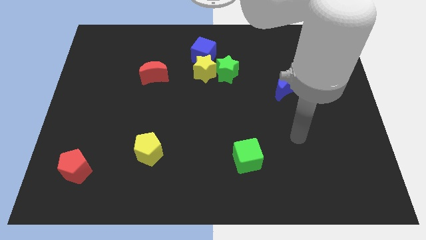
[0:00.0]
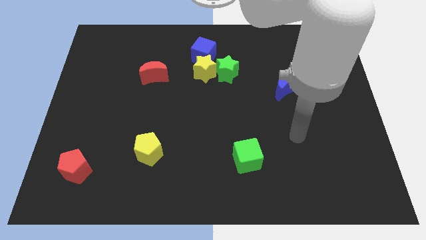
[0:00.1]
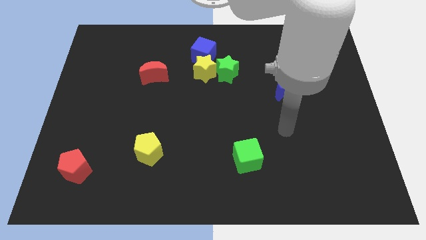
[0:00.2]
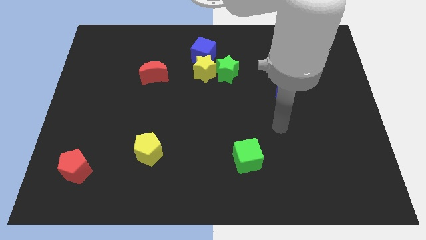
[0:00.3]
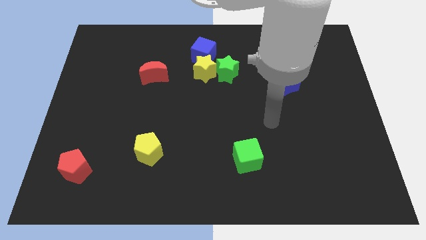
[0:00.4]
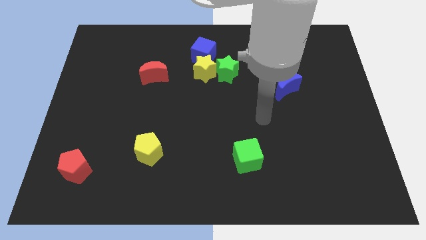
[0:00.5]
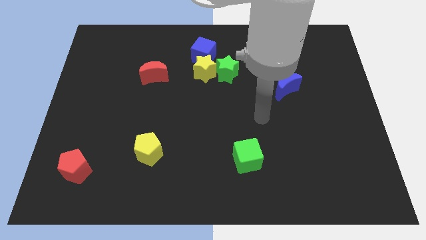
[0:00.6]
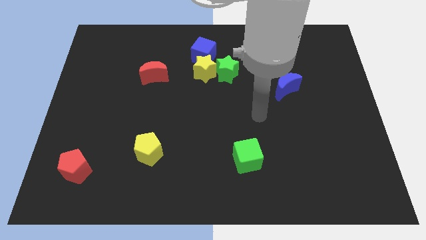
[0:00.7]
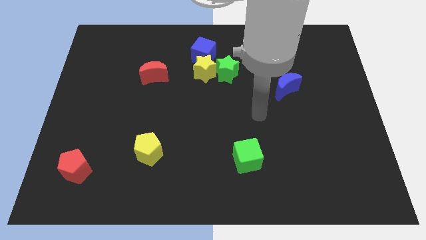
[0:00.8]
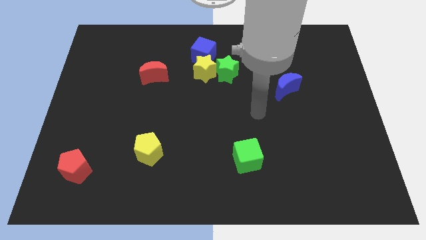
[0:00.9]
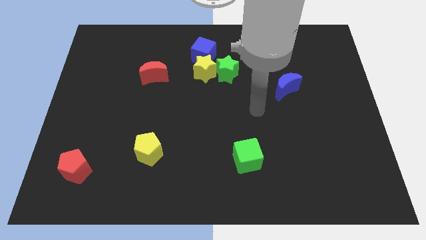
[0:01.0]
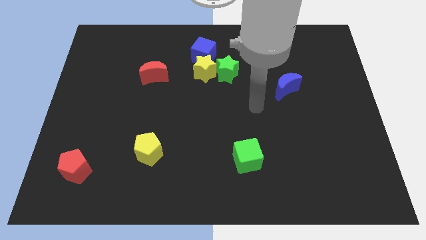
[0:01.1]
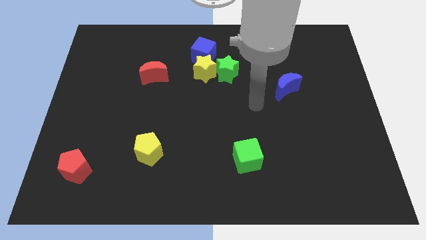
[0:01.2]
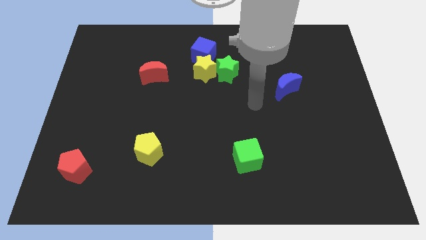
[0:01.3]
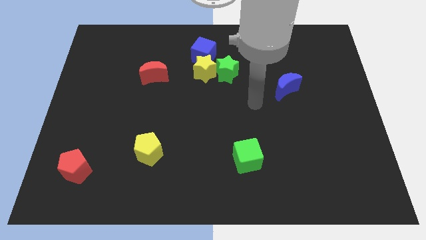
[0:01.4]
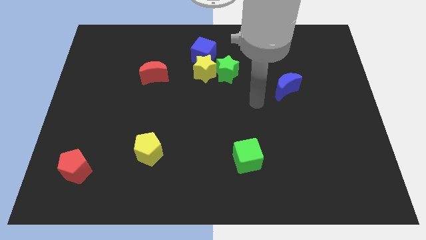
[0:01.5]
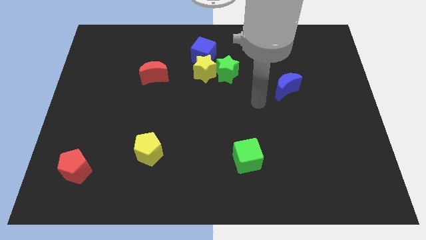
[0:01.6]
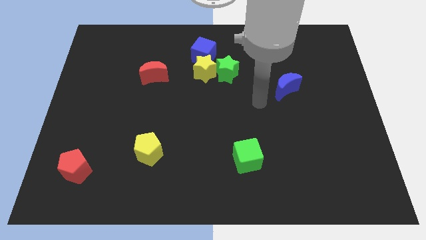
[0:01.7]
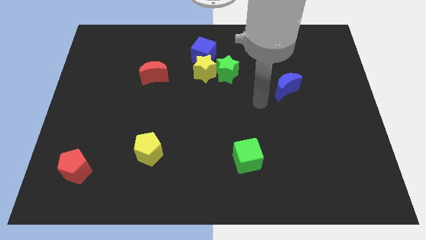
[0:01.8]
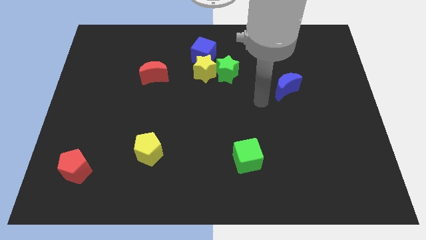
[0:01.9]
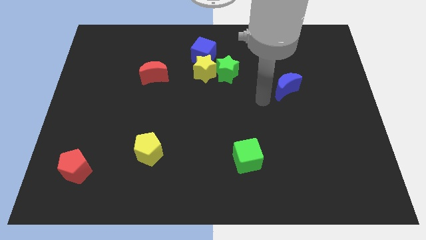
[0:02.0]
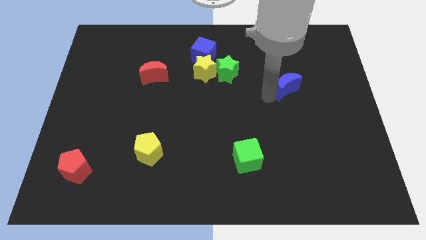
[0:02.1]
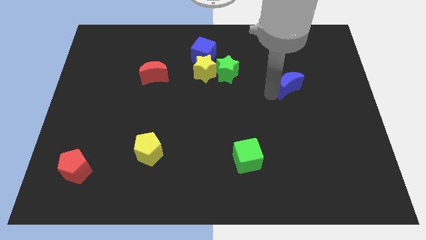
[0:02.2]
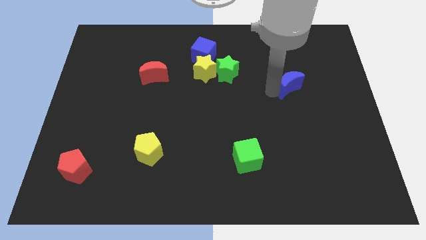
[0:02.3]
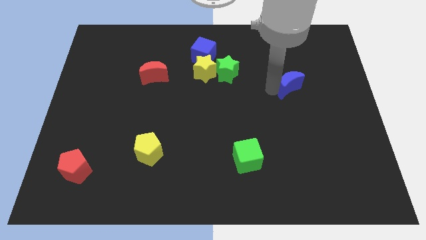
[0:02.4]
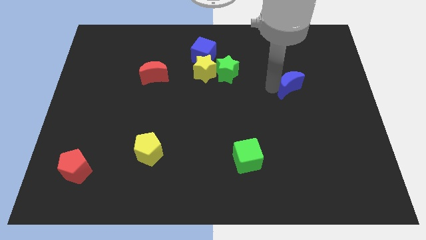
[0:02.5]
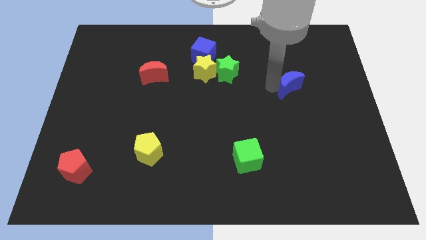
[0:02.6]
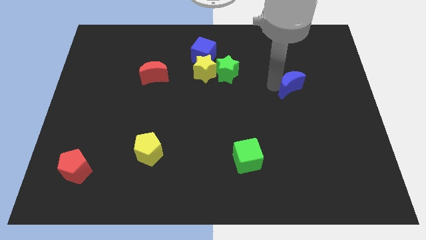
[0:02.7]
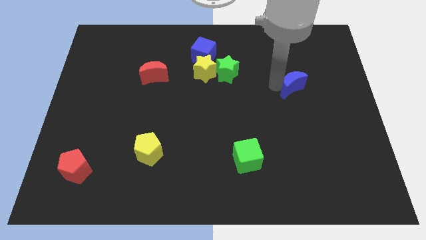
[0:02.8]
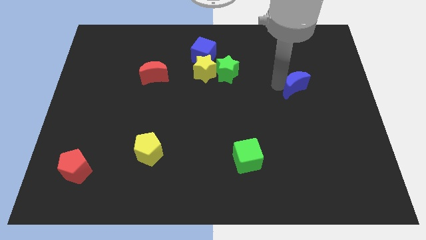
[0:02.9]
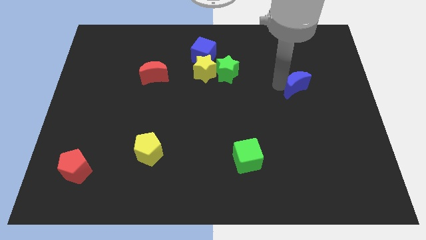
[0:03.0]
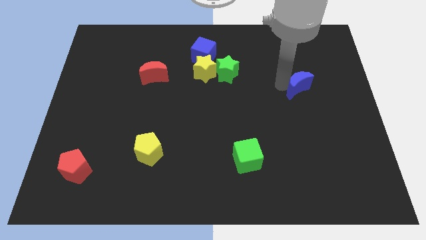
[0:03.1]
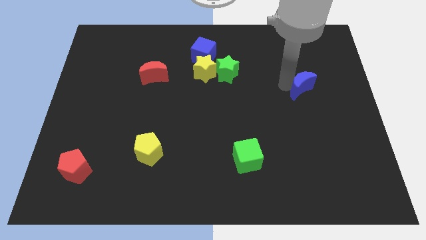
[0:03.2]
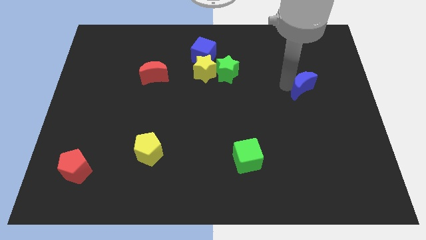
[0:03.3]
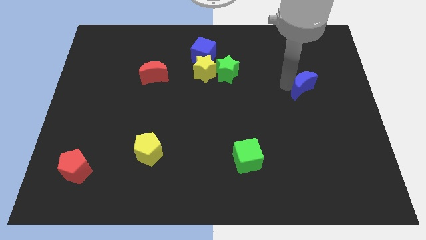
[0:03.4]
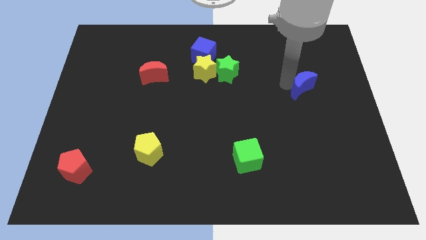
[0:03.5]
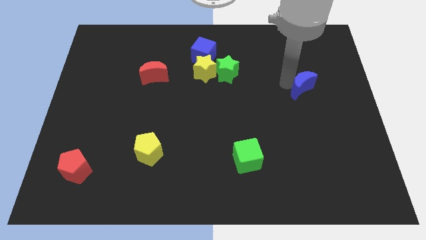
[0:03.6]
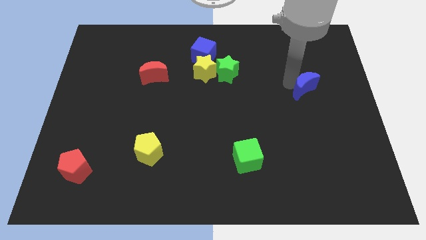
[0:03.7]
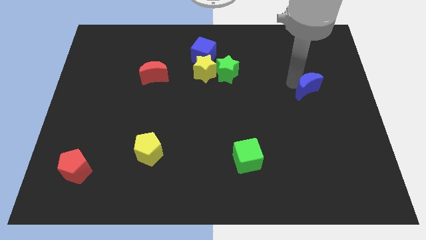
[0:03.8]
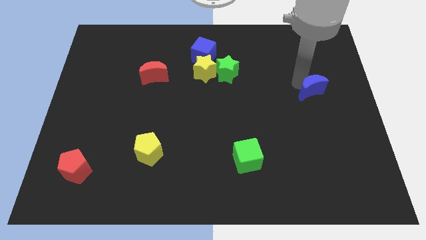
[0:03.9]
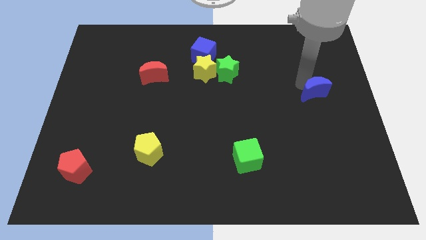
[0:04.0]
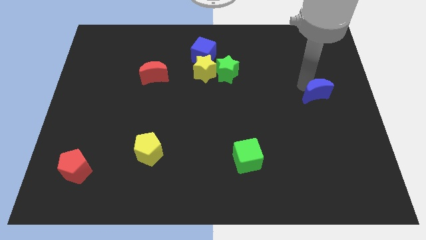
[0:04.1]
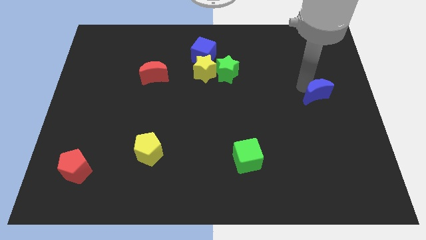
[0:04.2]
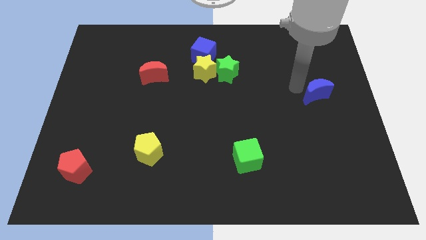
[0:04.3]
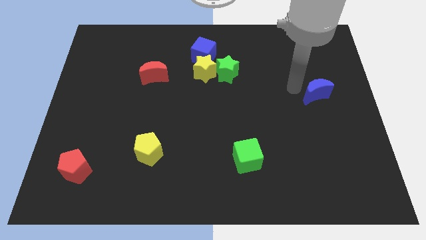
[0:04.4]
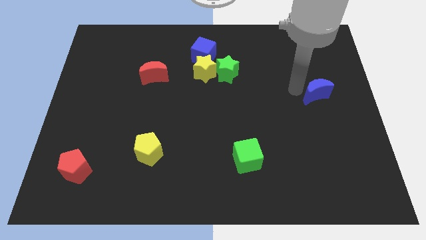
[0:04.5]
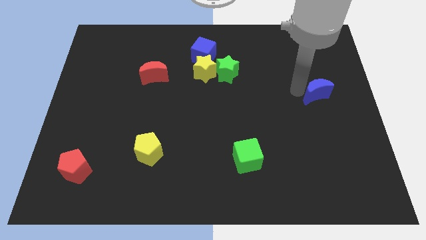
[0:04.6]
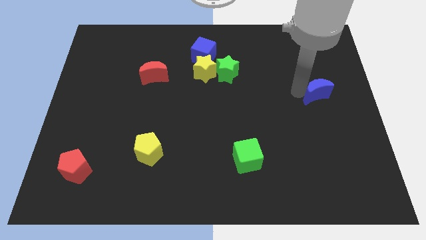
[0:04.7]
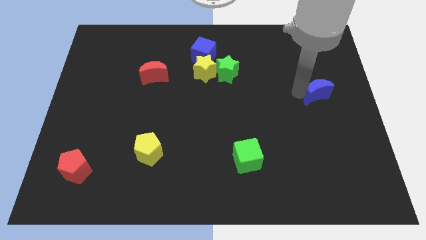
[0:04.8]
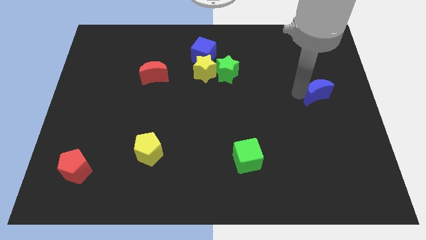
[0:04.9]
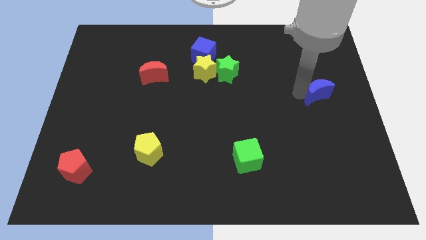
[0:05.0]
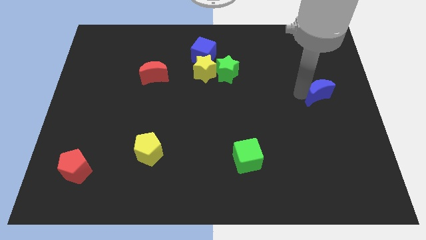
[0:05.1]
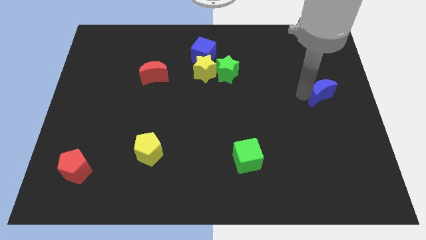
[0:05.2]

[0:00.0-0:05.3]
push the blue crescent to the right side of the table

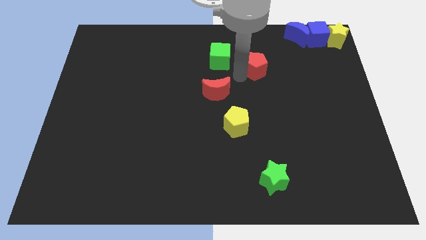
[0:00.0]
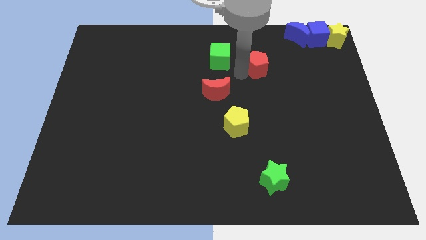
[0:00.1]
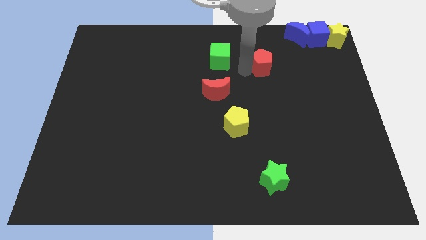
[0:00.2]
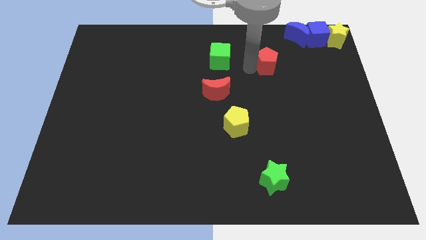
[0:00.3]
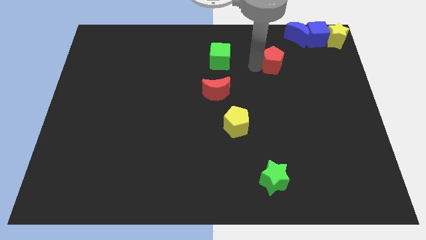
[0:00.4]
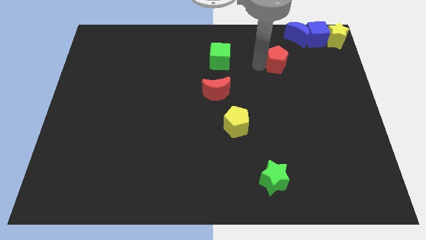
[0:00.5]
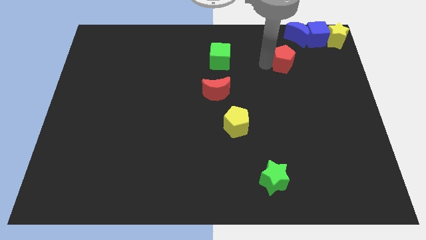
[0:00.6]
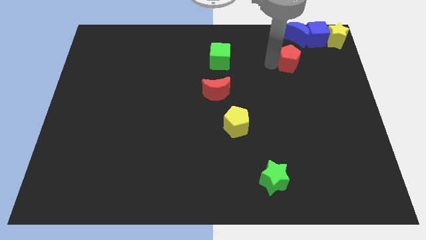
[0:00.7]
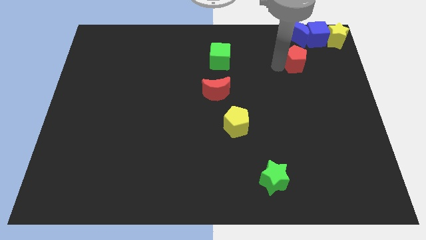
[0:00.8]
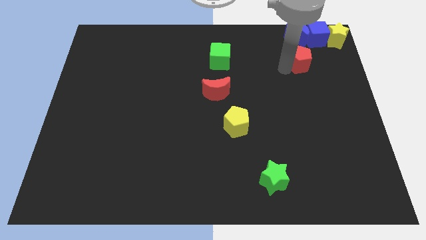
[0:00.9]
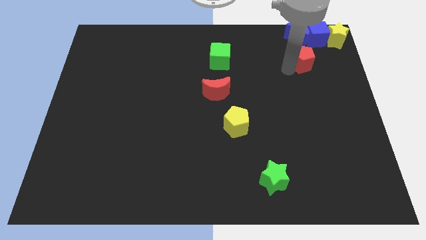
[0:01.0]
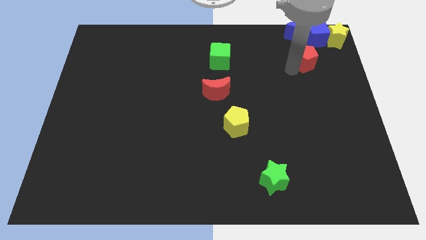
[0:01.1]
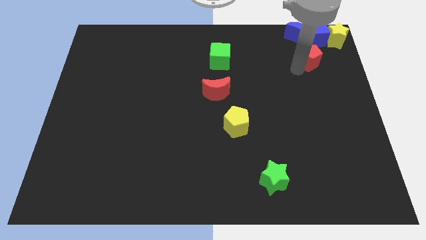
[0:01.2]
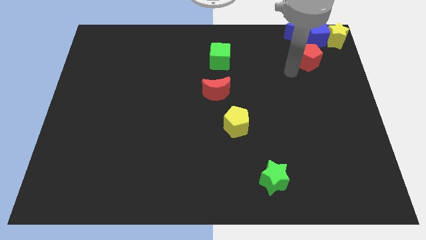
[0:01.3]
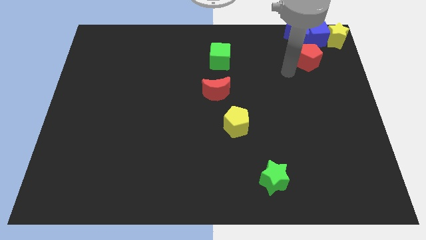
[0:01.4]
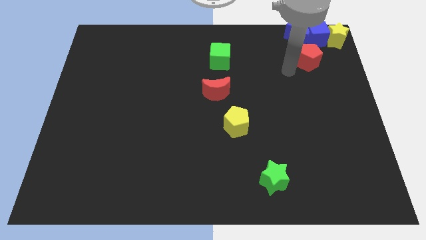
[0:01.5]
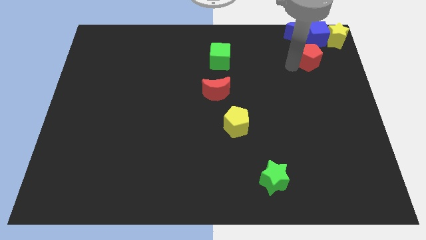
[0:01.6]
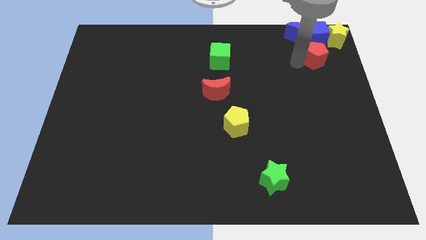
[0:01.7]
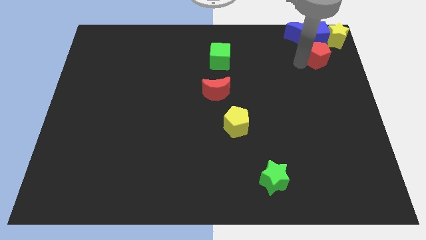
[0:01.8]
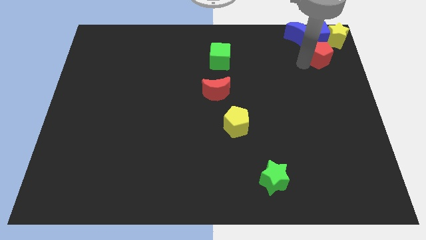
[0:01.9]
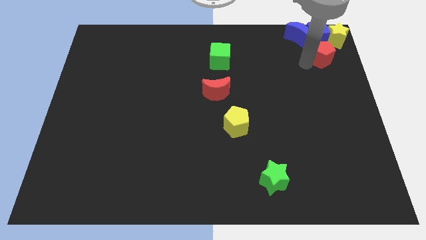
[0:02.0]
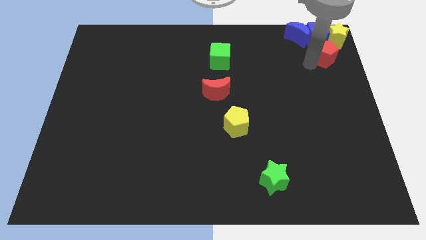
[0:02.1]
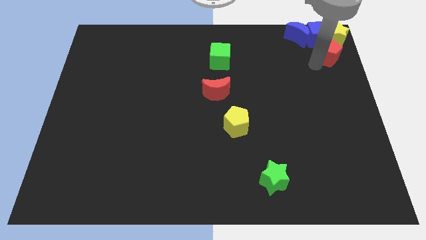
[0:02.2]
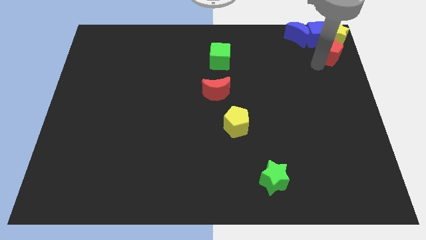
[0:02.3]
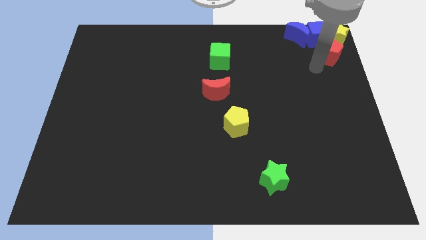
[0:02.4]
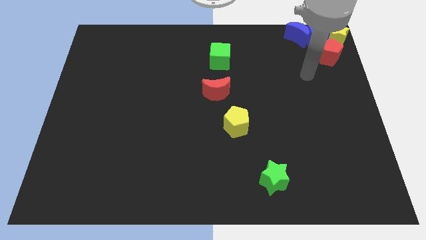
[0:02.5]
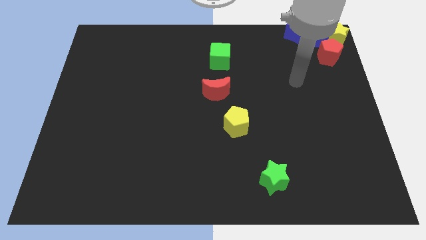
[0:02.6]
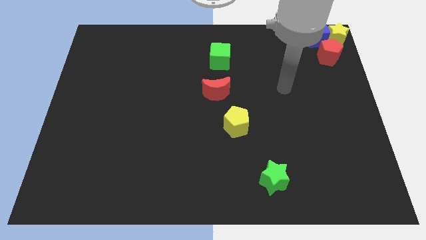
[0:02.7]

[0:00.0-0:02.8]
move the red pentagon at the bottom side of the yellow star

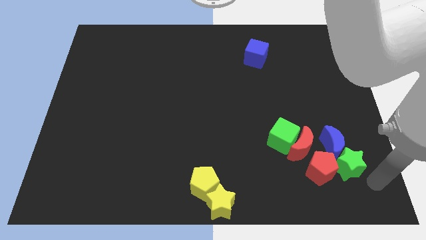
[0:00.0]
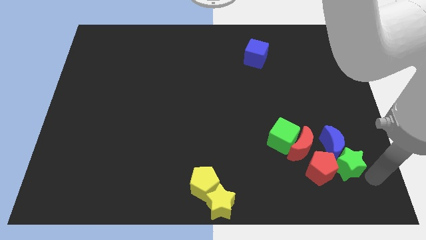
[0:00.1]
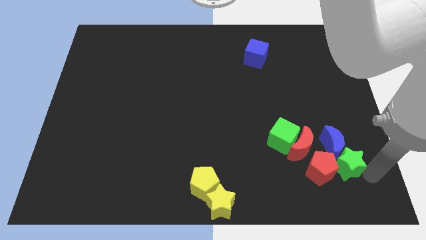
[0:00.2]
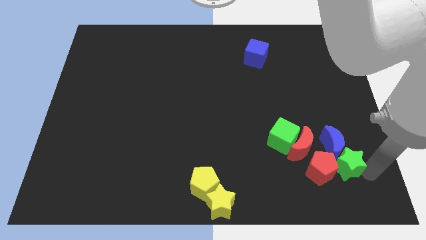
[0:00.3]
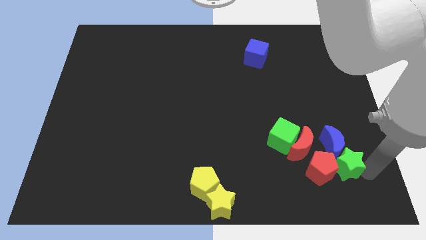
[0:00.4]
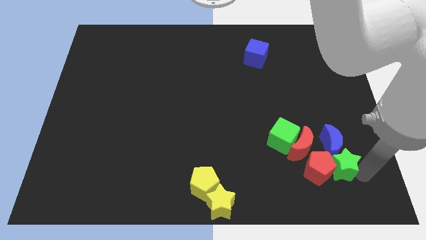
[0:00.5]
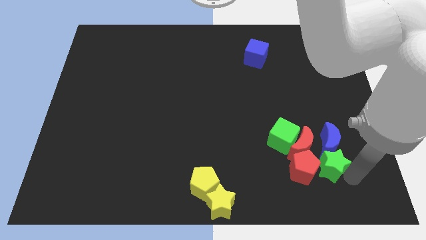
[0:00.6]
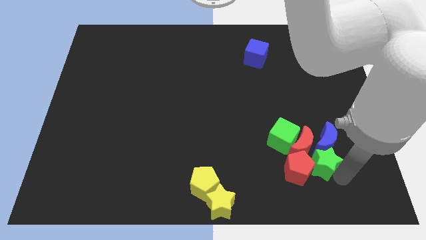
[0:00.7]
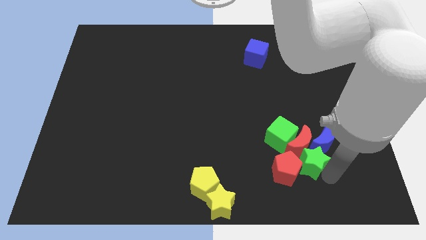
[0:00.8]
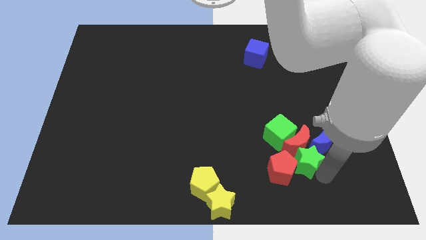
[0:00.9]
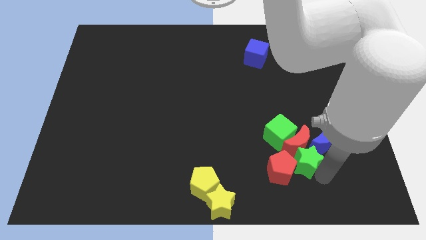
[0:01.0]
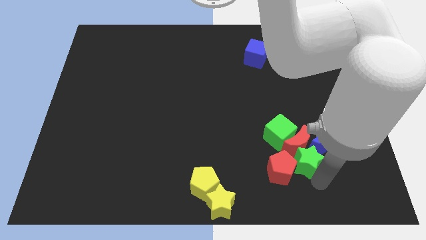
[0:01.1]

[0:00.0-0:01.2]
move the green star into red pentagon
